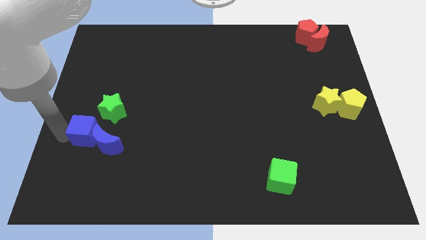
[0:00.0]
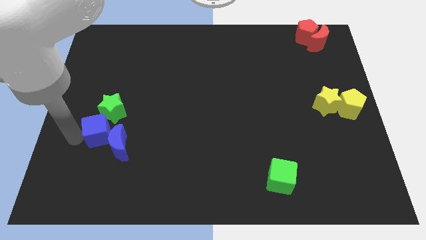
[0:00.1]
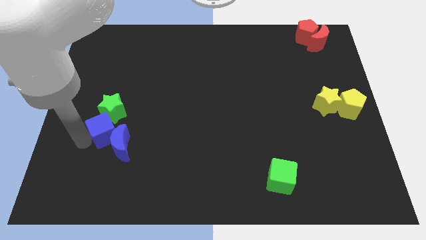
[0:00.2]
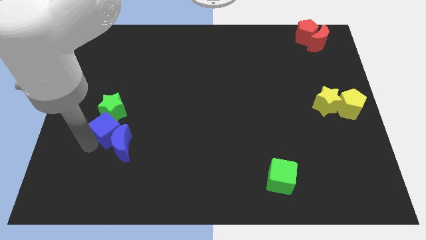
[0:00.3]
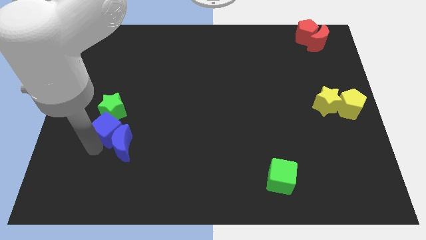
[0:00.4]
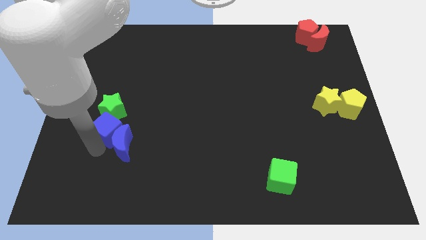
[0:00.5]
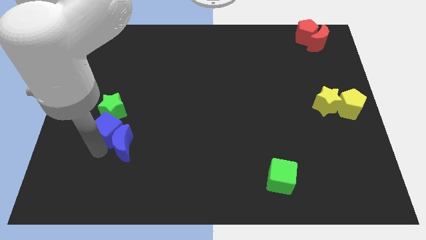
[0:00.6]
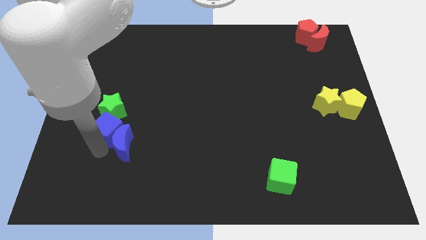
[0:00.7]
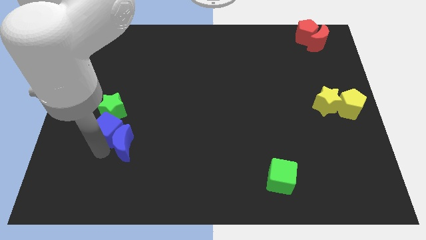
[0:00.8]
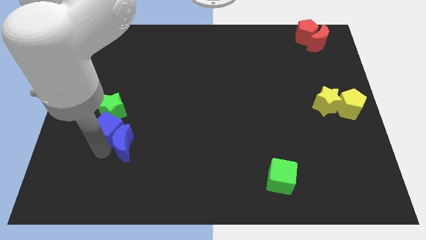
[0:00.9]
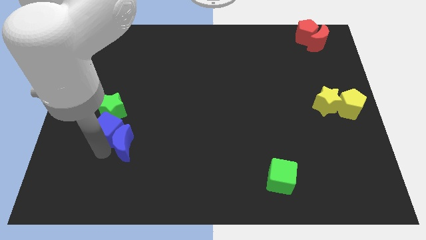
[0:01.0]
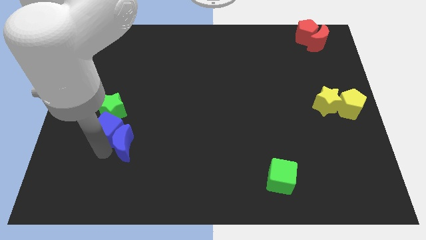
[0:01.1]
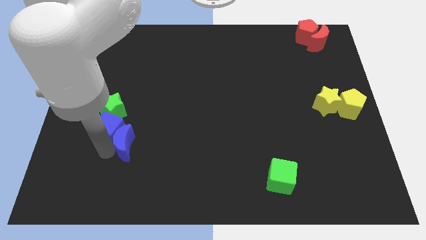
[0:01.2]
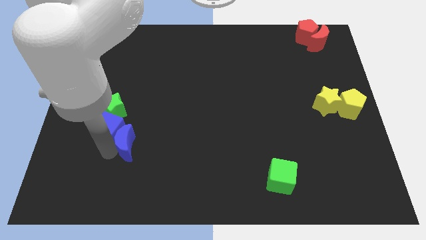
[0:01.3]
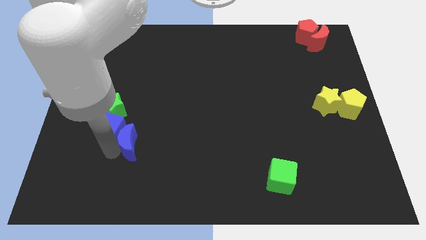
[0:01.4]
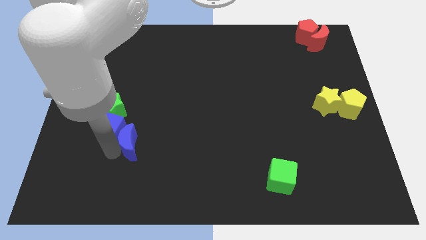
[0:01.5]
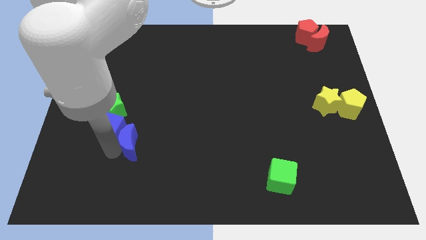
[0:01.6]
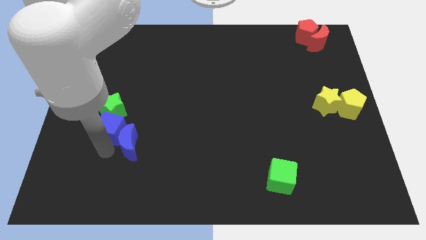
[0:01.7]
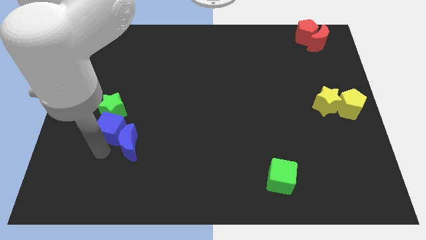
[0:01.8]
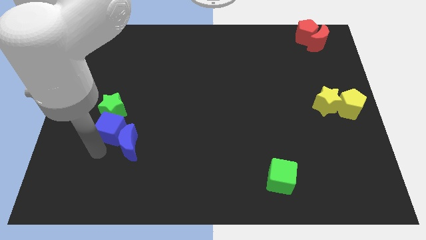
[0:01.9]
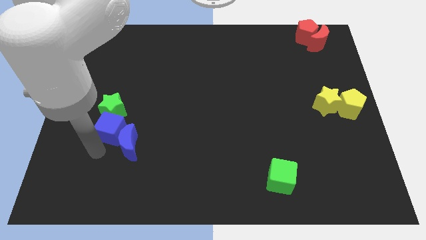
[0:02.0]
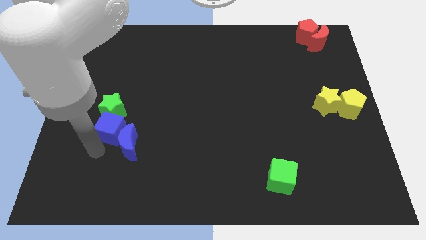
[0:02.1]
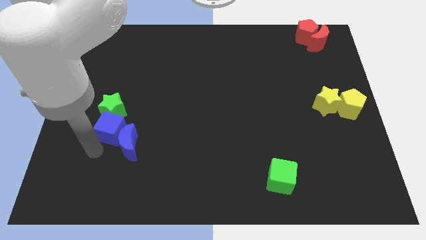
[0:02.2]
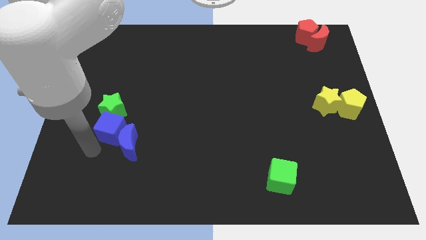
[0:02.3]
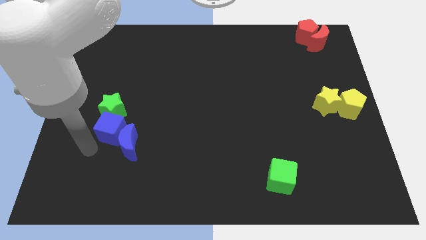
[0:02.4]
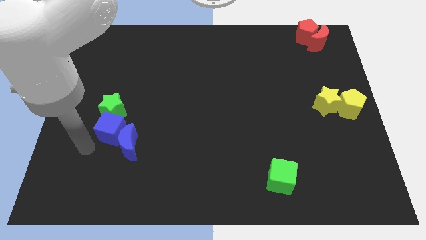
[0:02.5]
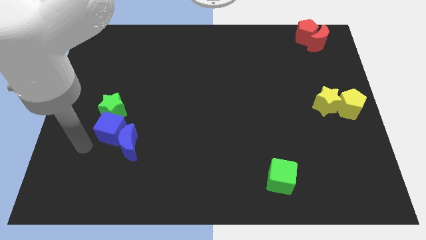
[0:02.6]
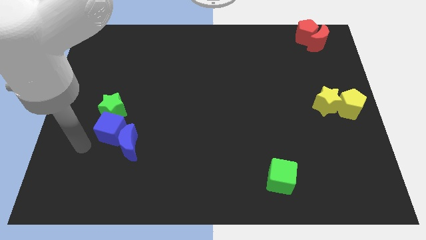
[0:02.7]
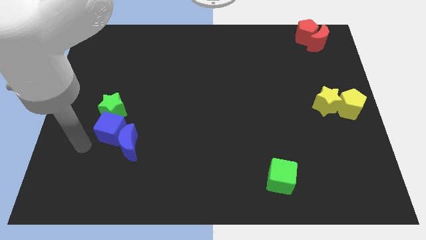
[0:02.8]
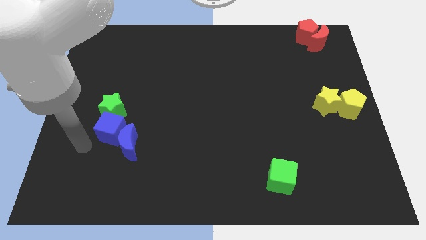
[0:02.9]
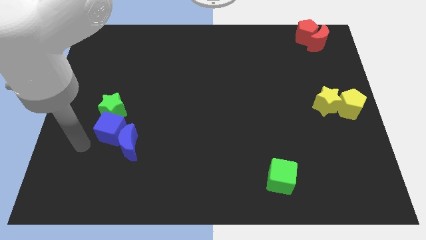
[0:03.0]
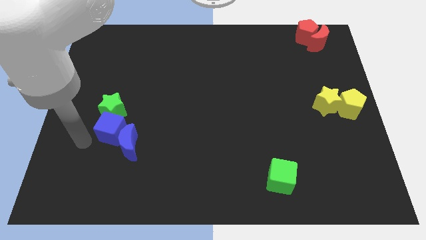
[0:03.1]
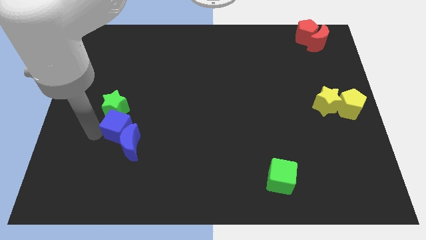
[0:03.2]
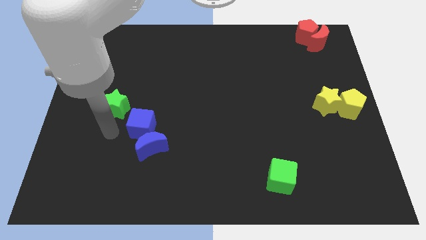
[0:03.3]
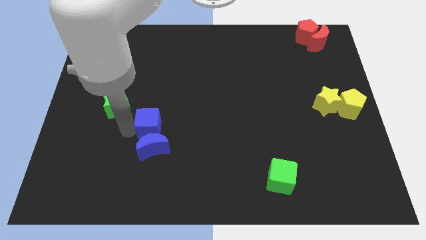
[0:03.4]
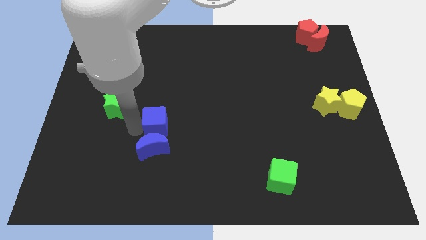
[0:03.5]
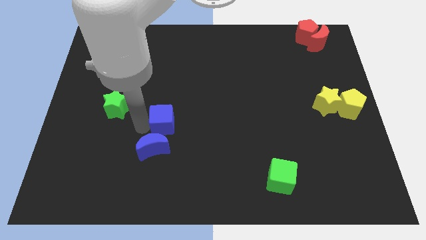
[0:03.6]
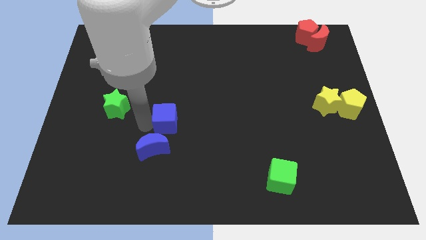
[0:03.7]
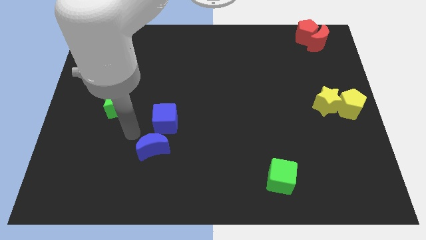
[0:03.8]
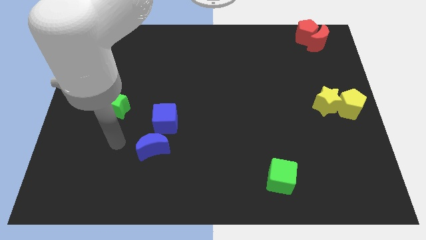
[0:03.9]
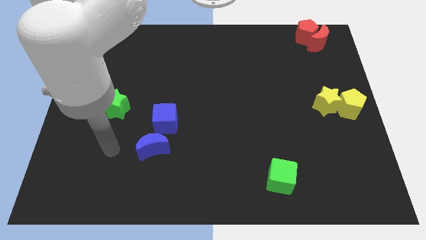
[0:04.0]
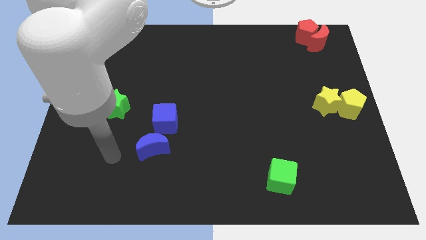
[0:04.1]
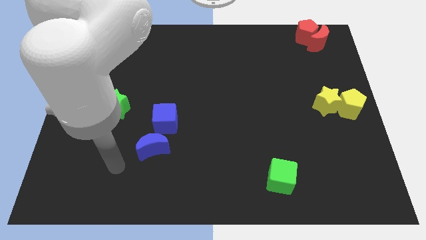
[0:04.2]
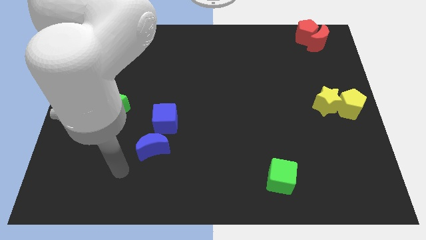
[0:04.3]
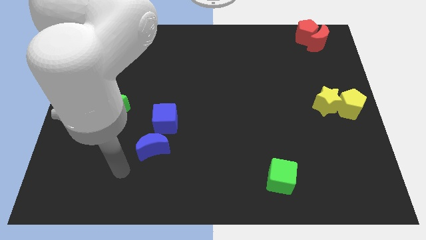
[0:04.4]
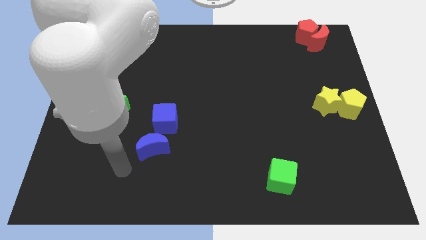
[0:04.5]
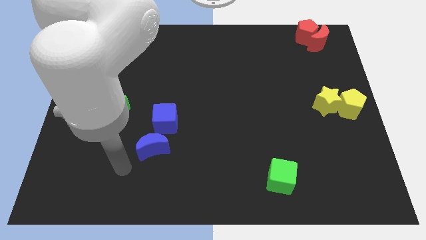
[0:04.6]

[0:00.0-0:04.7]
separate the blue cube and the blue crescent

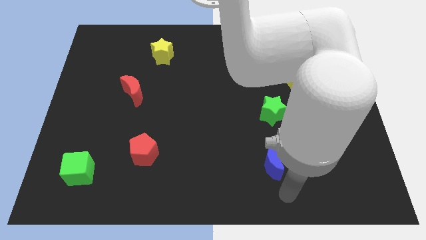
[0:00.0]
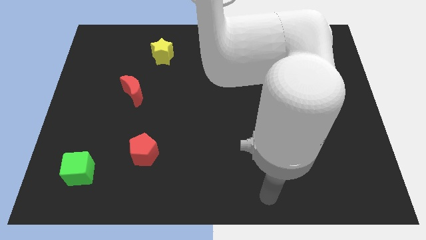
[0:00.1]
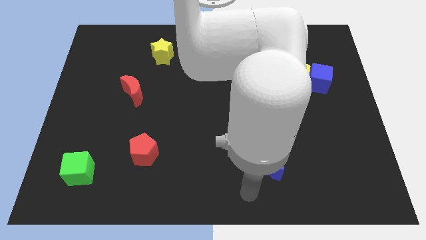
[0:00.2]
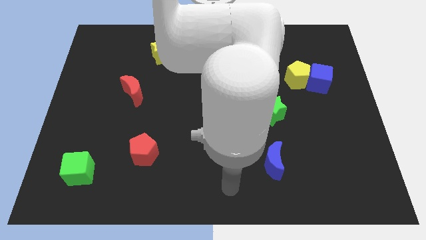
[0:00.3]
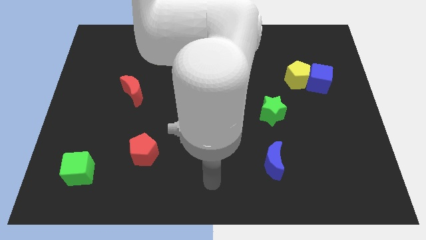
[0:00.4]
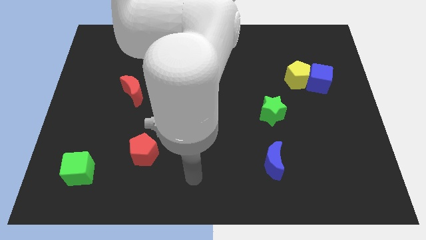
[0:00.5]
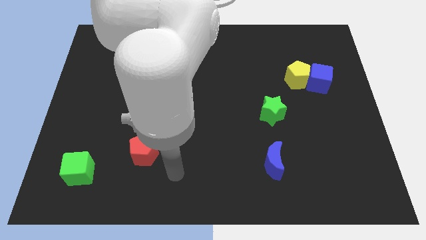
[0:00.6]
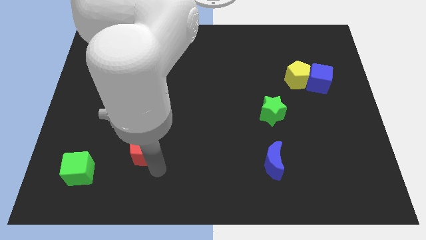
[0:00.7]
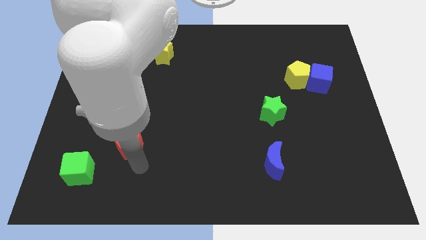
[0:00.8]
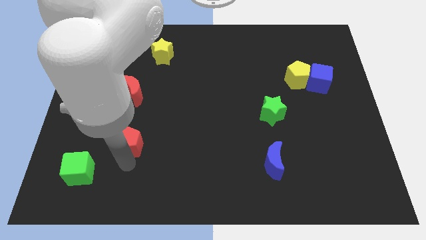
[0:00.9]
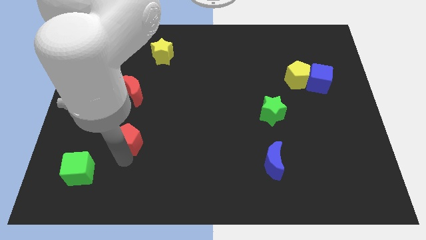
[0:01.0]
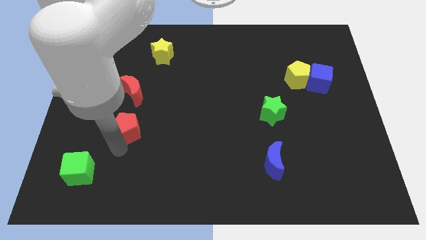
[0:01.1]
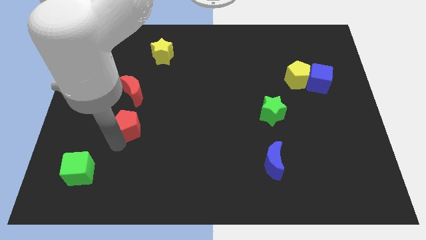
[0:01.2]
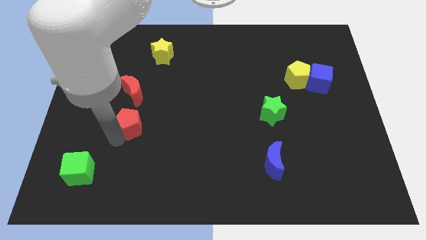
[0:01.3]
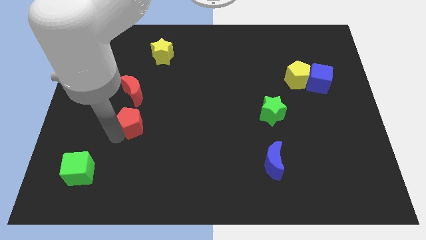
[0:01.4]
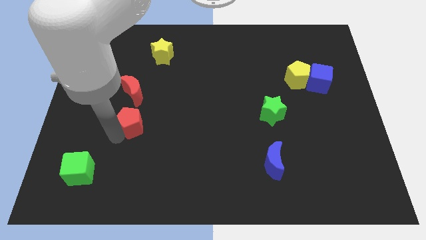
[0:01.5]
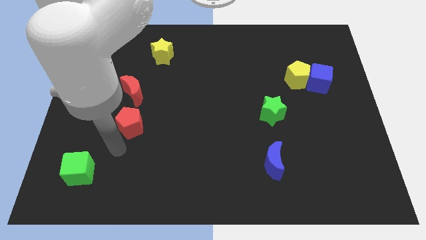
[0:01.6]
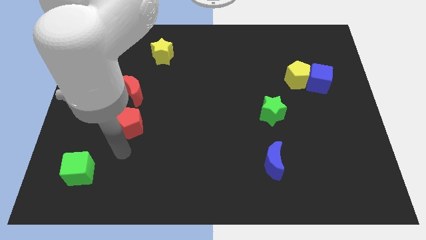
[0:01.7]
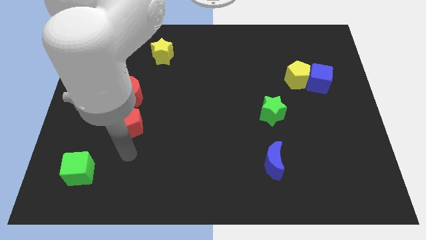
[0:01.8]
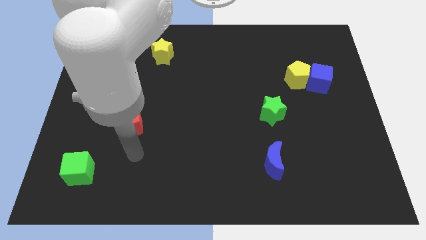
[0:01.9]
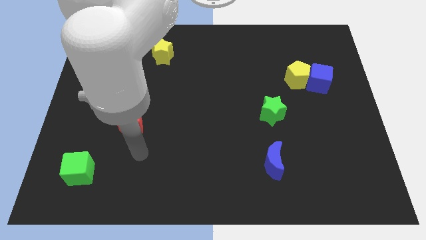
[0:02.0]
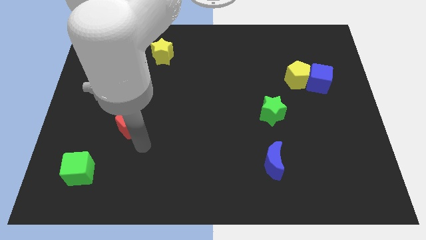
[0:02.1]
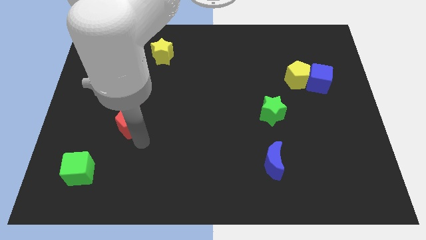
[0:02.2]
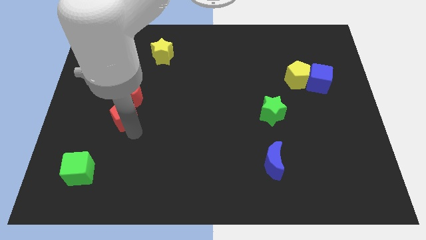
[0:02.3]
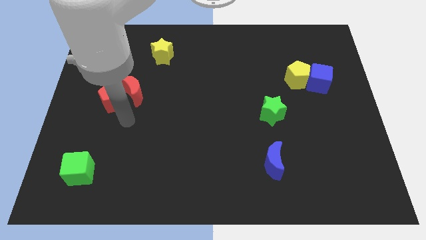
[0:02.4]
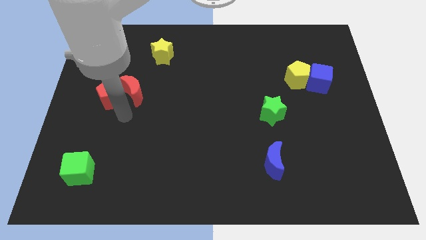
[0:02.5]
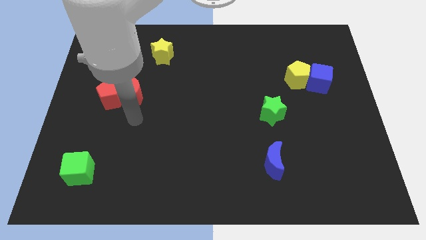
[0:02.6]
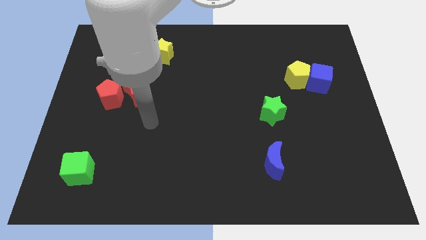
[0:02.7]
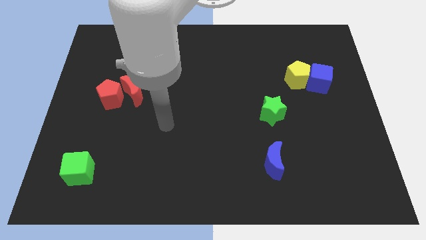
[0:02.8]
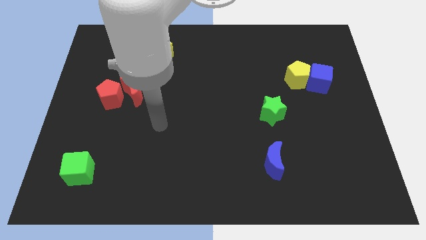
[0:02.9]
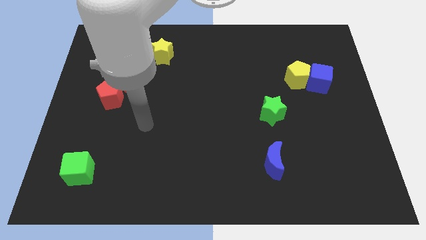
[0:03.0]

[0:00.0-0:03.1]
slide red pentagon close to red moon

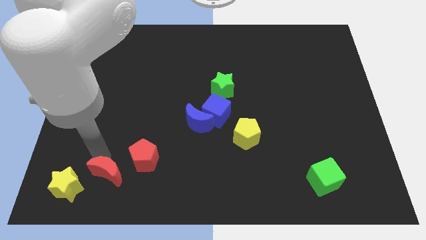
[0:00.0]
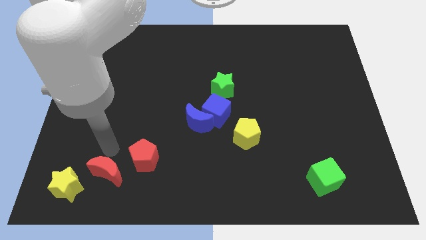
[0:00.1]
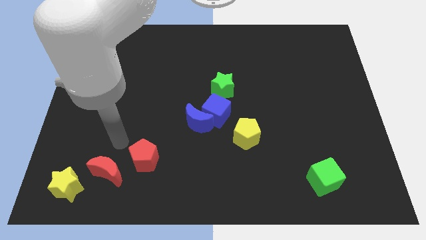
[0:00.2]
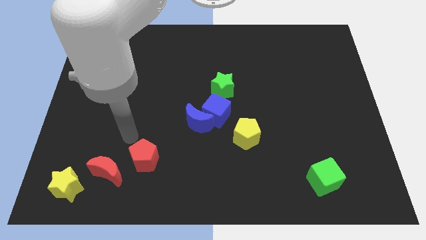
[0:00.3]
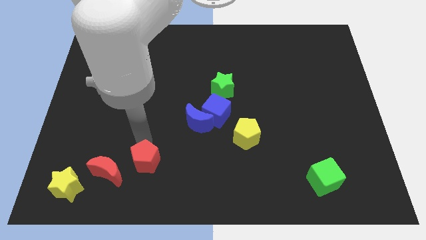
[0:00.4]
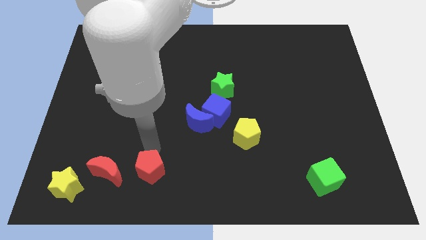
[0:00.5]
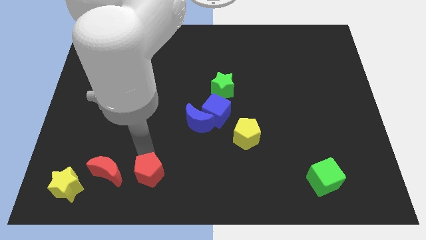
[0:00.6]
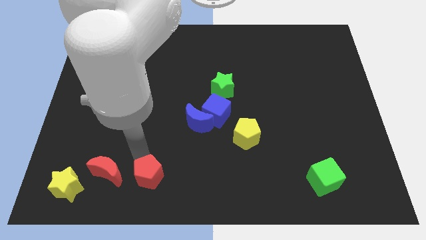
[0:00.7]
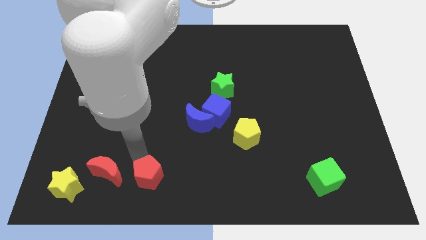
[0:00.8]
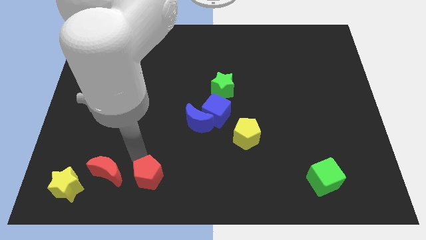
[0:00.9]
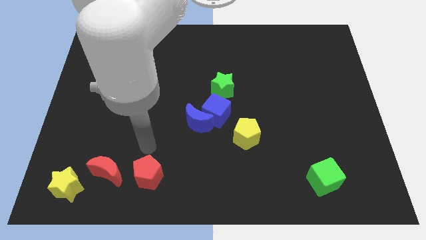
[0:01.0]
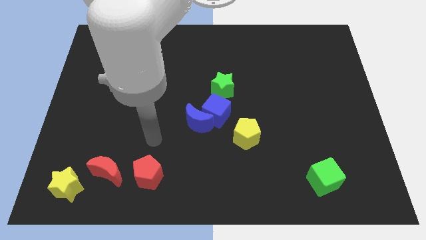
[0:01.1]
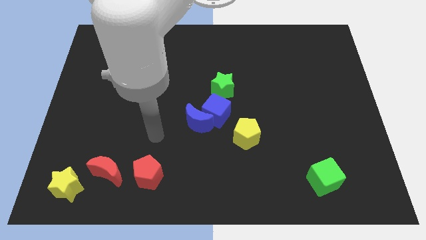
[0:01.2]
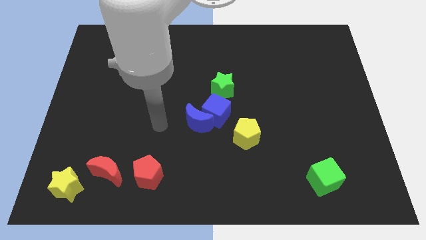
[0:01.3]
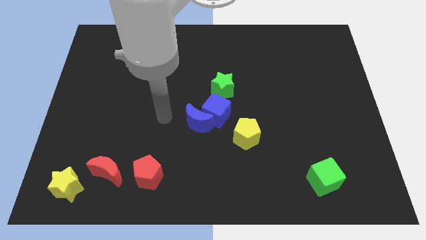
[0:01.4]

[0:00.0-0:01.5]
move the red pentagon slightly to the right side of the red moon
